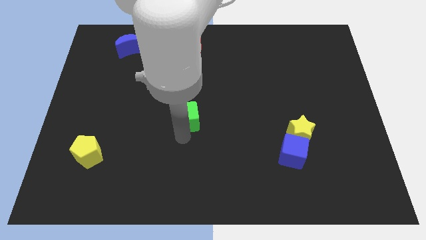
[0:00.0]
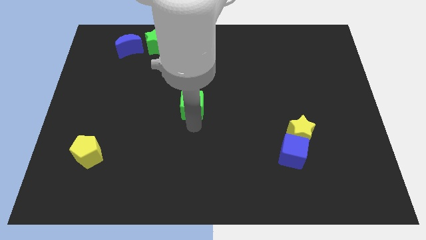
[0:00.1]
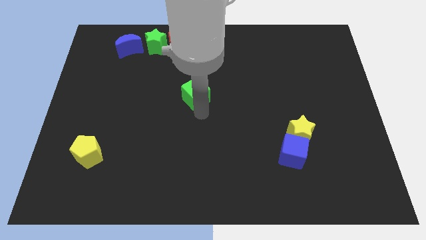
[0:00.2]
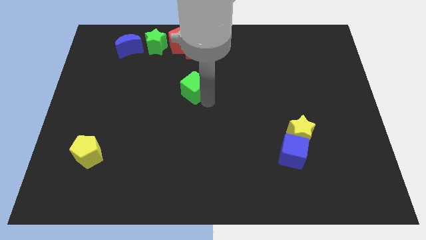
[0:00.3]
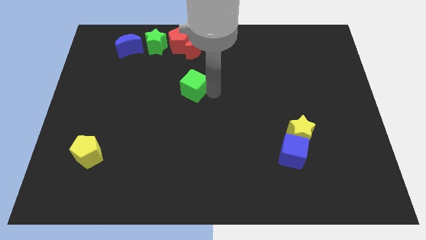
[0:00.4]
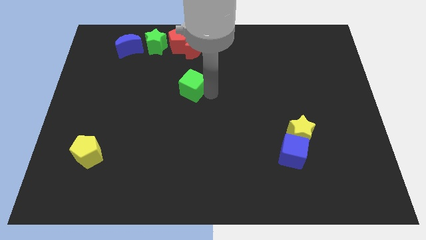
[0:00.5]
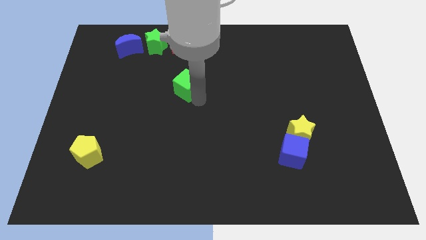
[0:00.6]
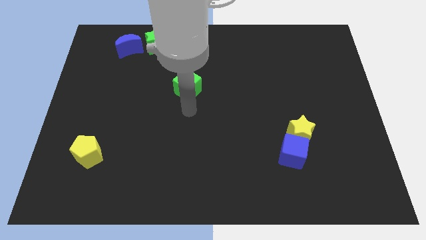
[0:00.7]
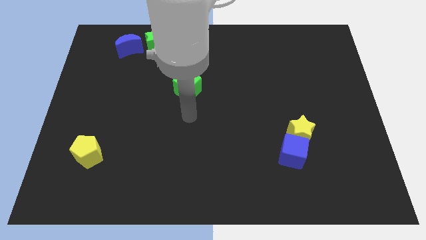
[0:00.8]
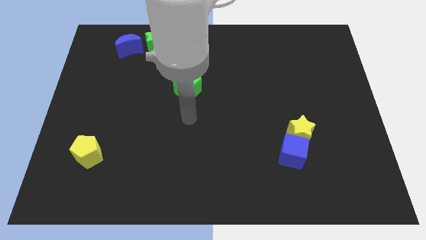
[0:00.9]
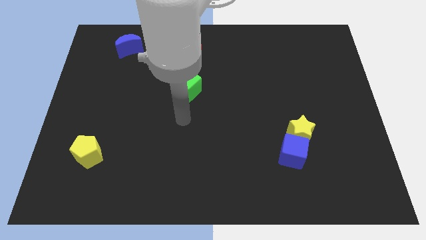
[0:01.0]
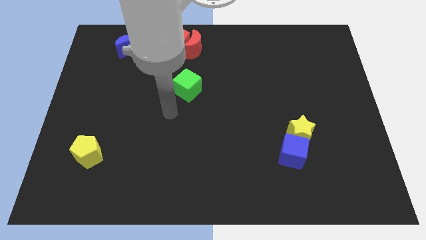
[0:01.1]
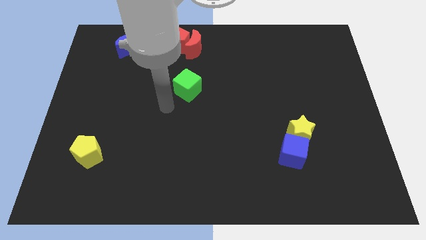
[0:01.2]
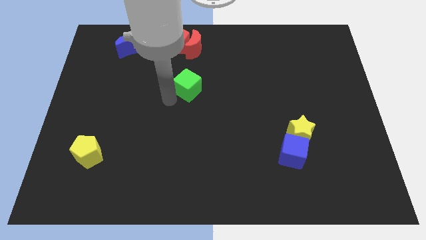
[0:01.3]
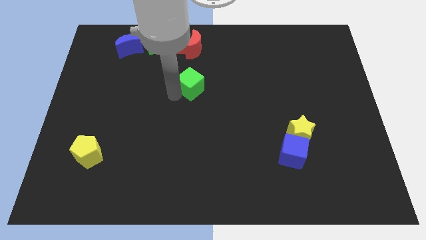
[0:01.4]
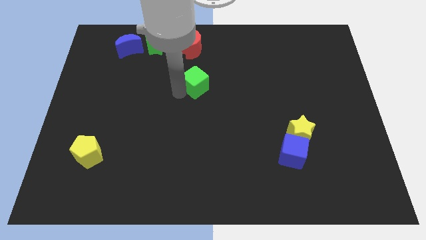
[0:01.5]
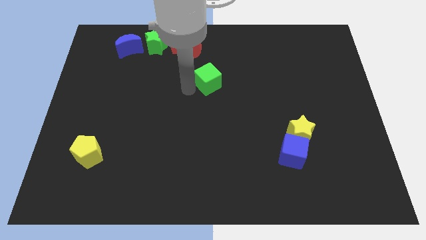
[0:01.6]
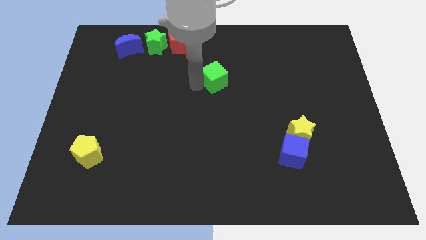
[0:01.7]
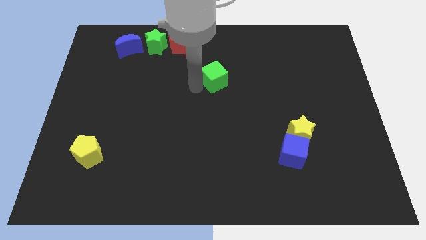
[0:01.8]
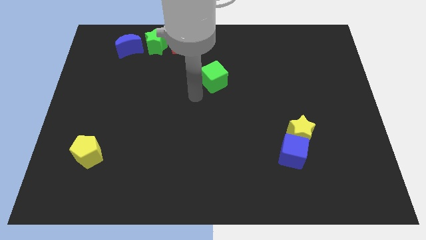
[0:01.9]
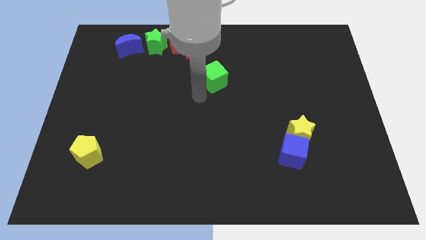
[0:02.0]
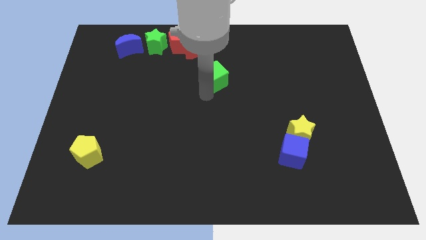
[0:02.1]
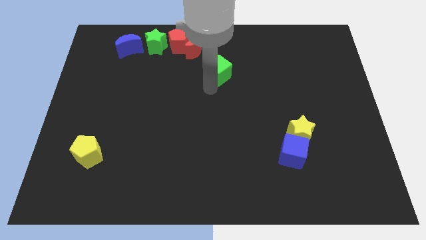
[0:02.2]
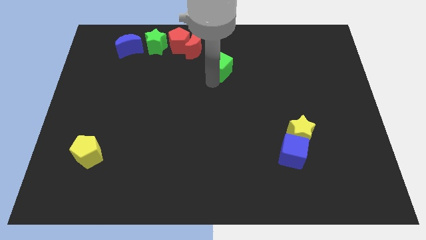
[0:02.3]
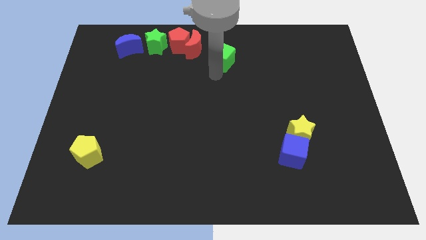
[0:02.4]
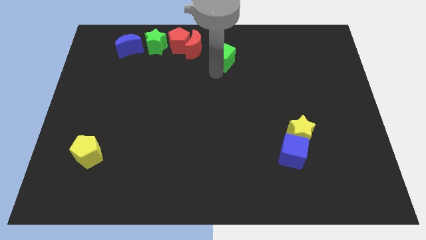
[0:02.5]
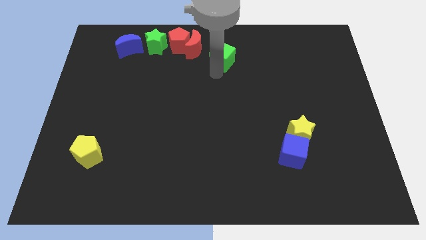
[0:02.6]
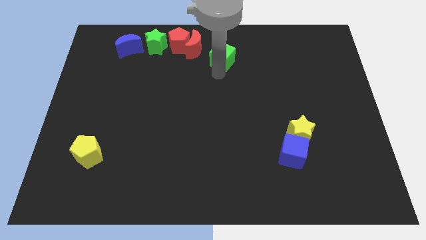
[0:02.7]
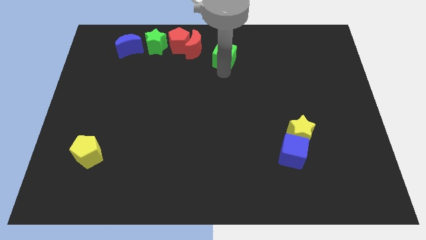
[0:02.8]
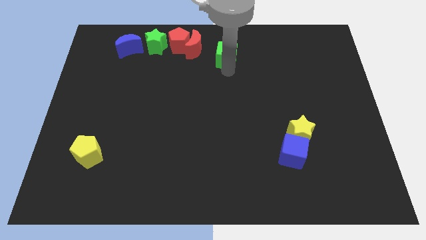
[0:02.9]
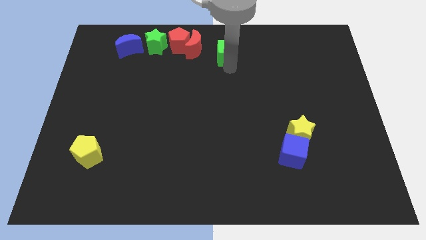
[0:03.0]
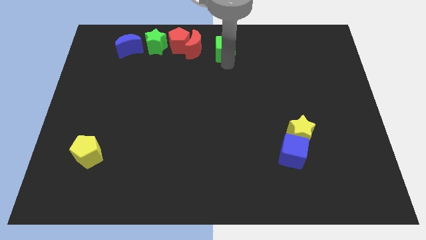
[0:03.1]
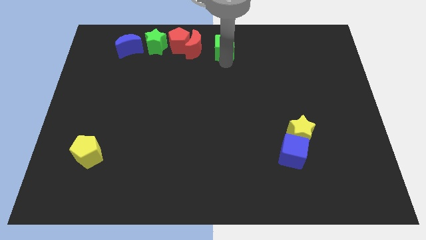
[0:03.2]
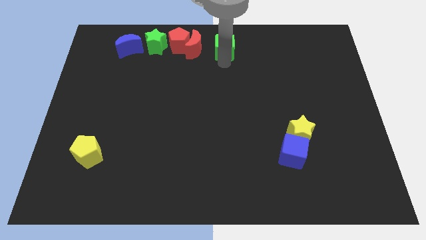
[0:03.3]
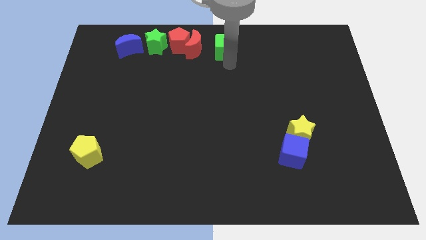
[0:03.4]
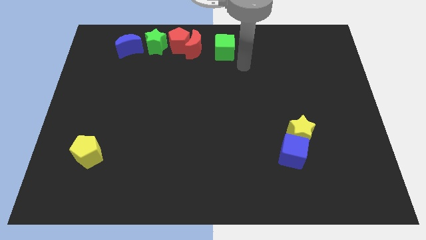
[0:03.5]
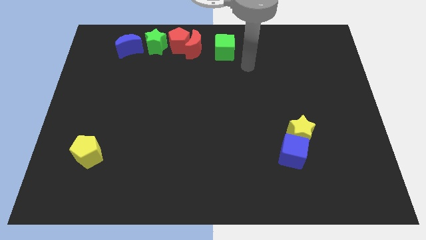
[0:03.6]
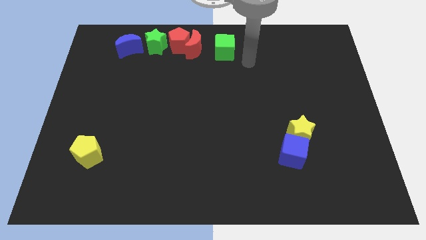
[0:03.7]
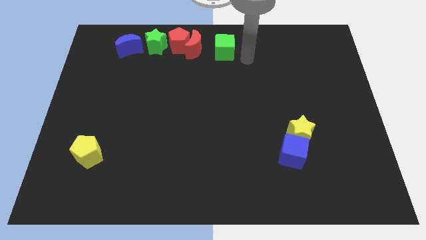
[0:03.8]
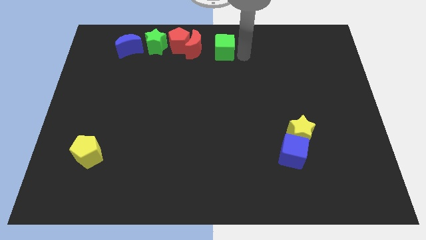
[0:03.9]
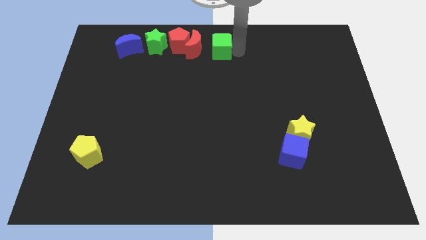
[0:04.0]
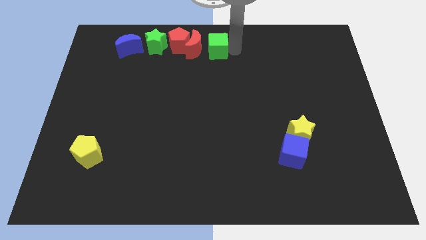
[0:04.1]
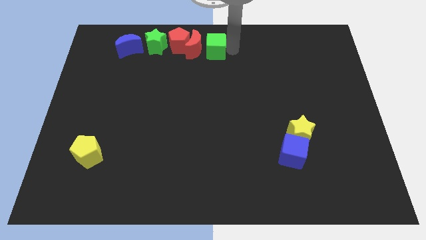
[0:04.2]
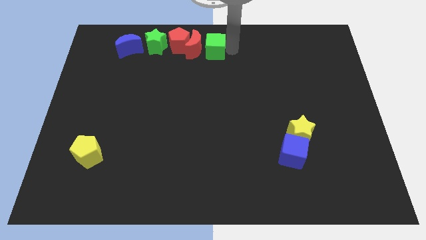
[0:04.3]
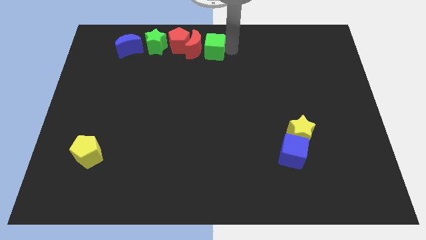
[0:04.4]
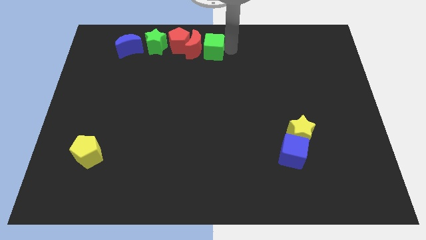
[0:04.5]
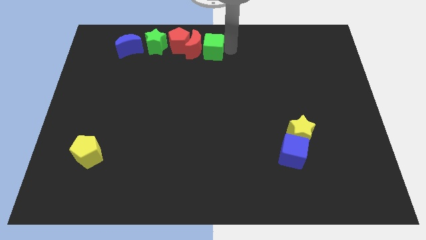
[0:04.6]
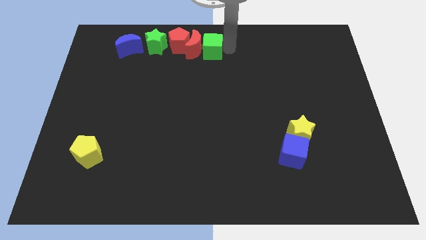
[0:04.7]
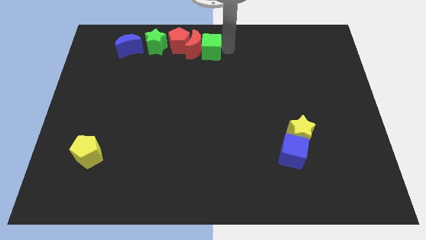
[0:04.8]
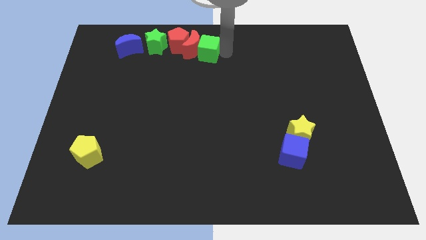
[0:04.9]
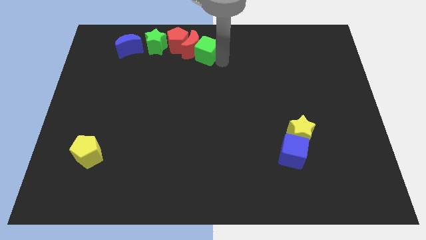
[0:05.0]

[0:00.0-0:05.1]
push the green cube into the right side of the red crescent

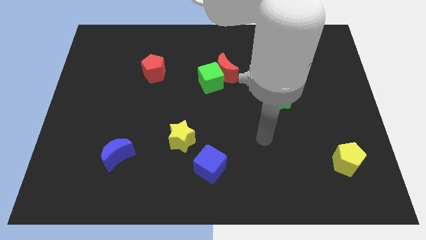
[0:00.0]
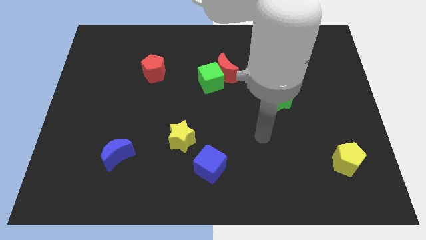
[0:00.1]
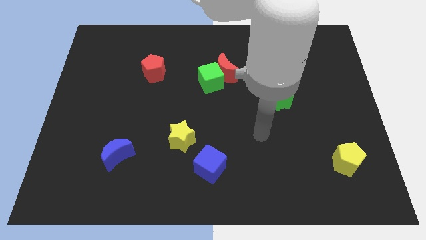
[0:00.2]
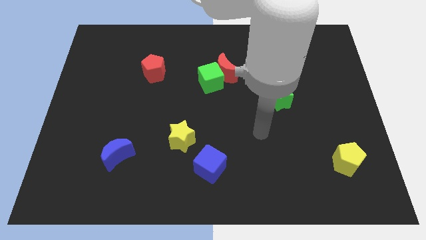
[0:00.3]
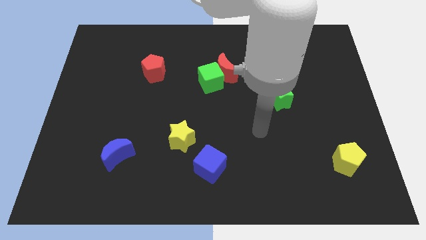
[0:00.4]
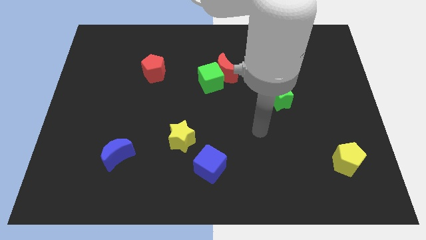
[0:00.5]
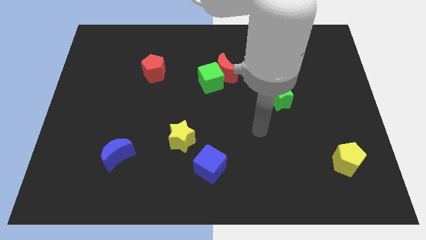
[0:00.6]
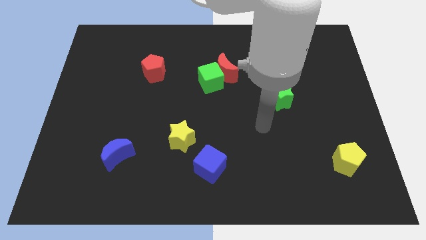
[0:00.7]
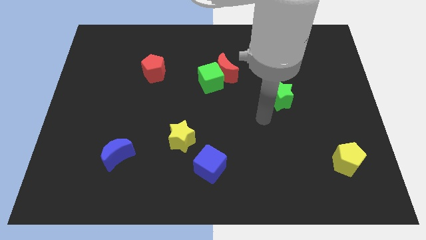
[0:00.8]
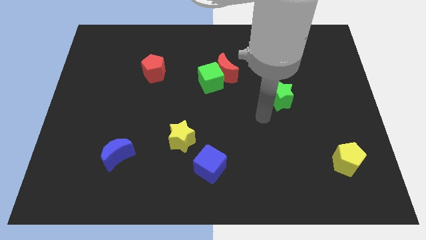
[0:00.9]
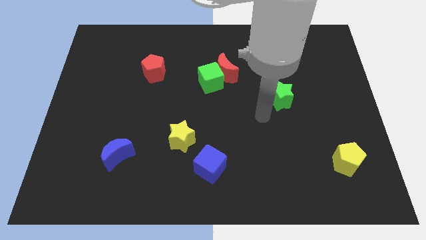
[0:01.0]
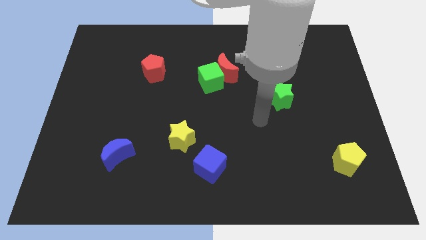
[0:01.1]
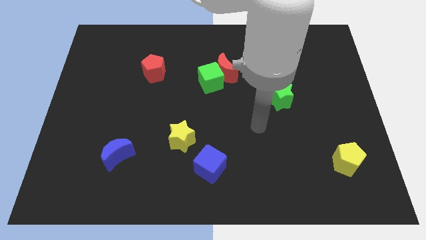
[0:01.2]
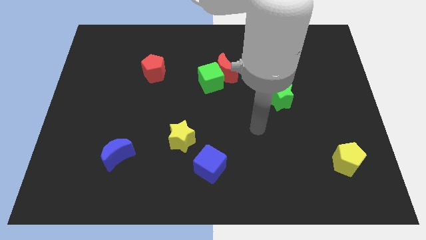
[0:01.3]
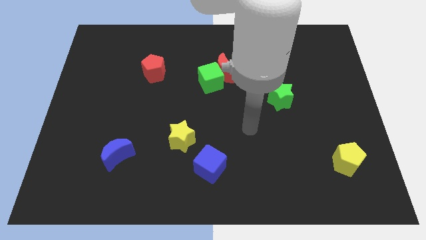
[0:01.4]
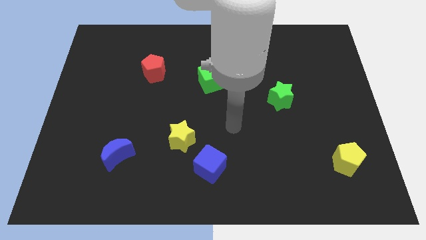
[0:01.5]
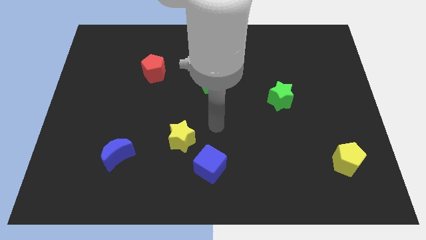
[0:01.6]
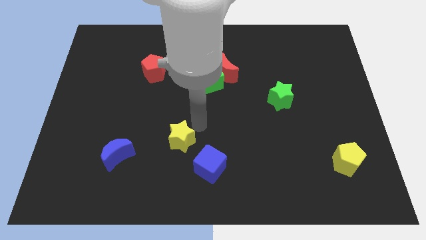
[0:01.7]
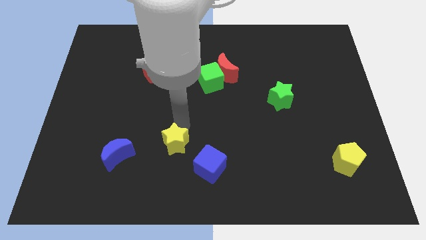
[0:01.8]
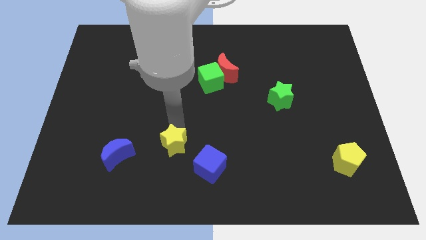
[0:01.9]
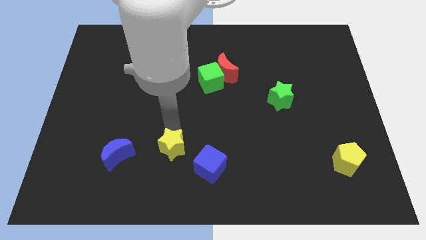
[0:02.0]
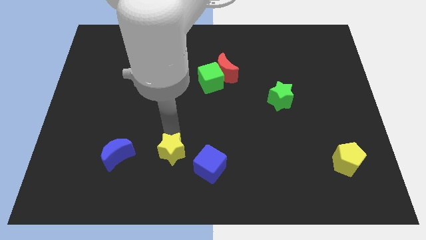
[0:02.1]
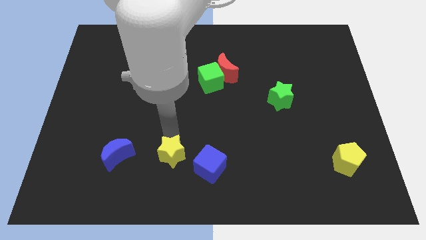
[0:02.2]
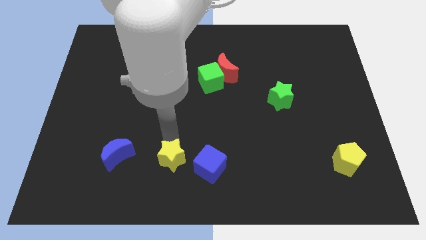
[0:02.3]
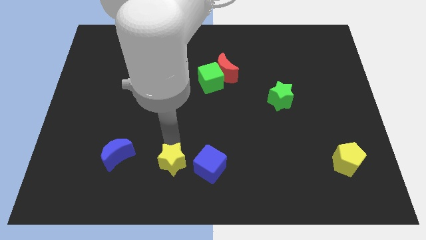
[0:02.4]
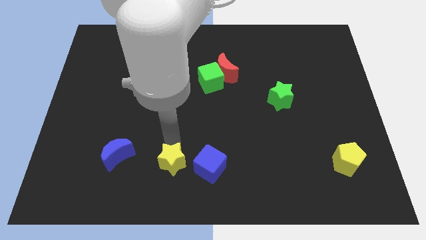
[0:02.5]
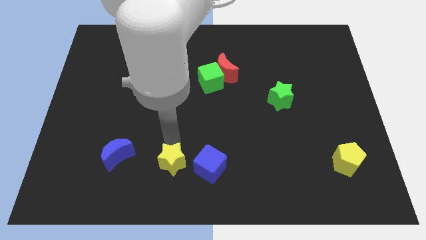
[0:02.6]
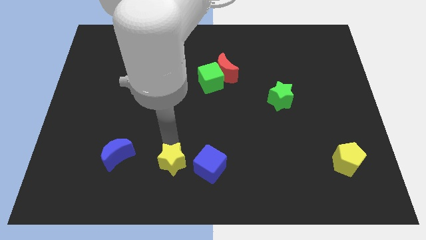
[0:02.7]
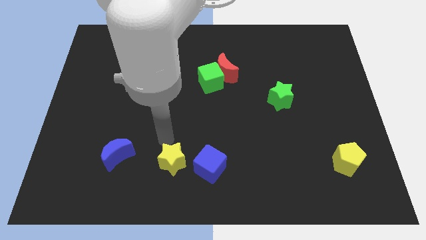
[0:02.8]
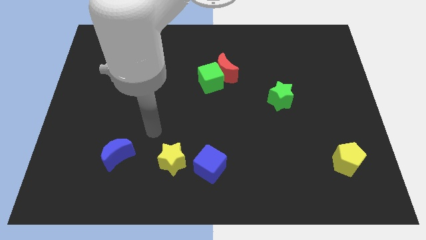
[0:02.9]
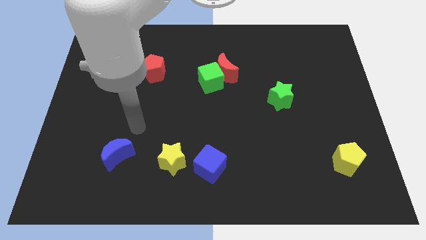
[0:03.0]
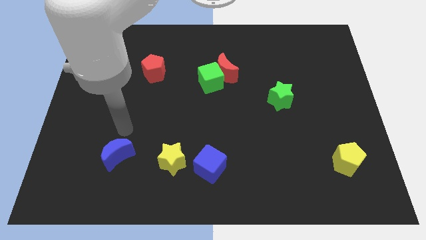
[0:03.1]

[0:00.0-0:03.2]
push yellow star in between blue blocks

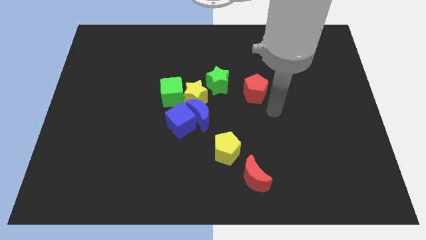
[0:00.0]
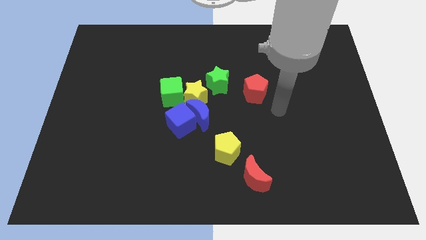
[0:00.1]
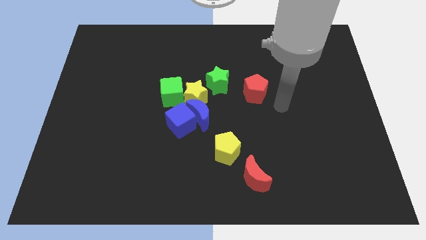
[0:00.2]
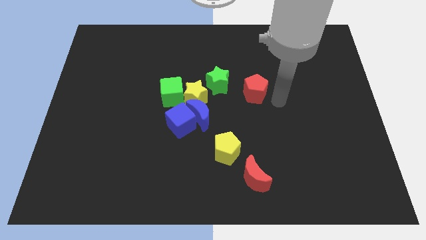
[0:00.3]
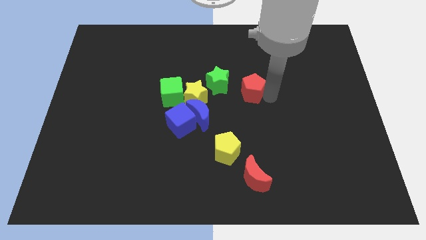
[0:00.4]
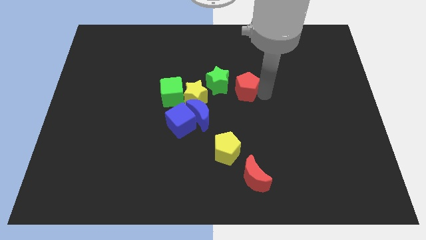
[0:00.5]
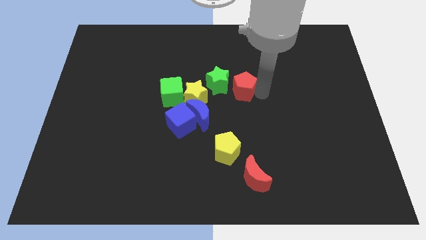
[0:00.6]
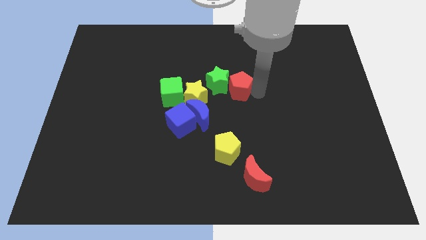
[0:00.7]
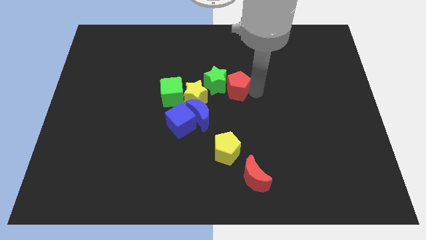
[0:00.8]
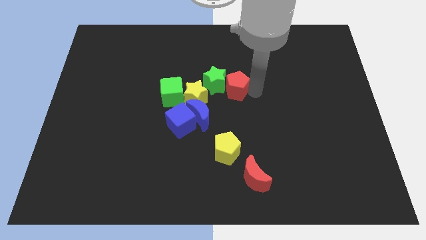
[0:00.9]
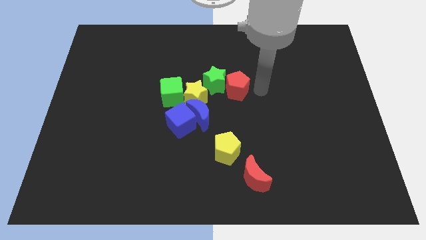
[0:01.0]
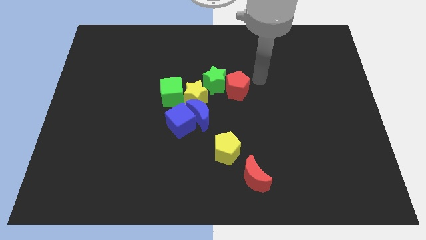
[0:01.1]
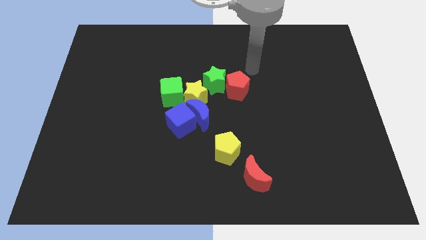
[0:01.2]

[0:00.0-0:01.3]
push the red pentagon into the green star
